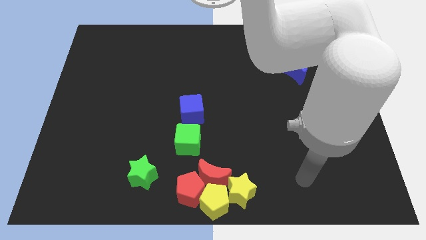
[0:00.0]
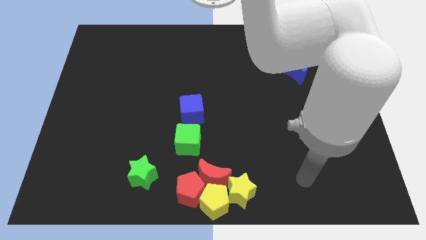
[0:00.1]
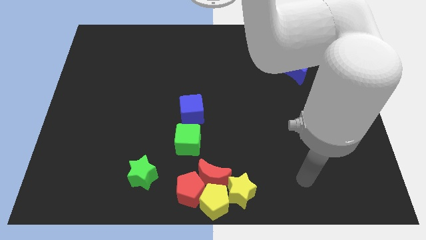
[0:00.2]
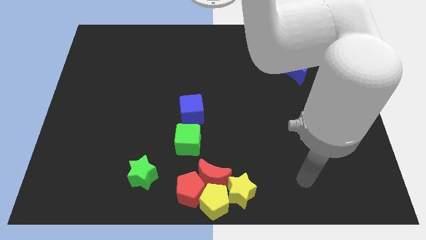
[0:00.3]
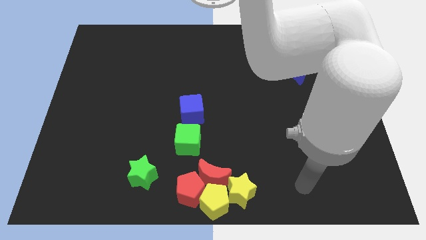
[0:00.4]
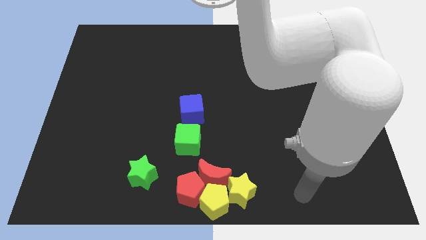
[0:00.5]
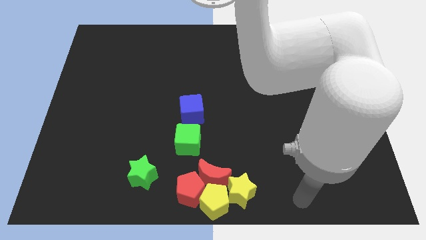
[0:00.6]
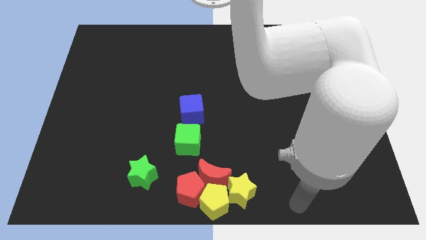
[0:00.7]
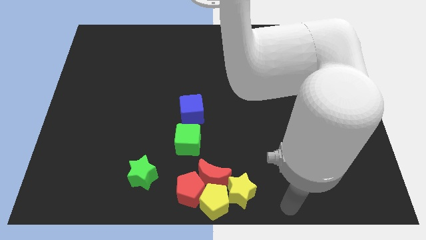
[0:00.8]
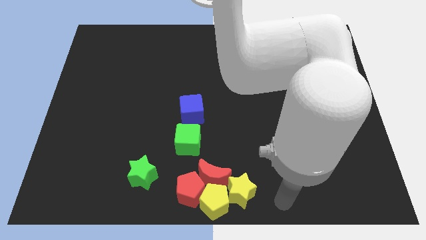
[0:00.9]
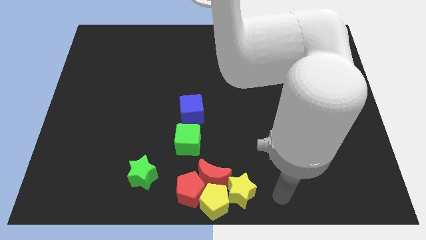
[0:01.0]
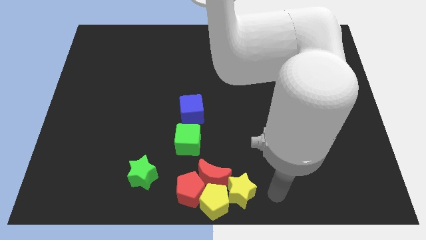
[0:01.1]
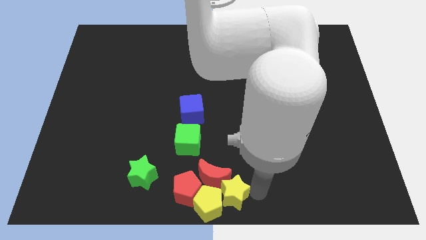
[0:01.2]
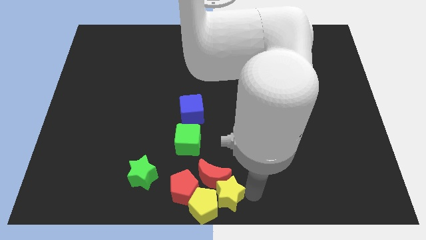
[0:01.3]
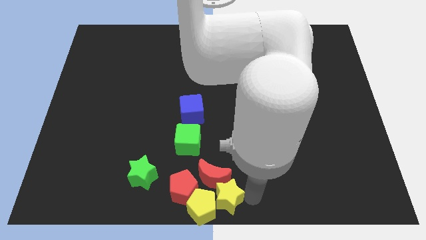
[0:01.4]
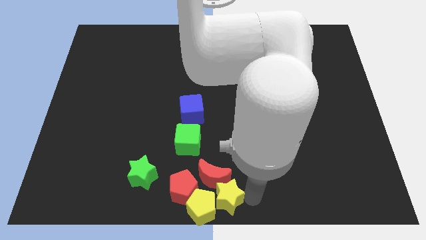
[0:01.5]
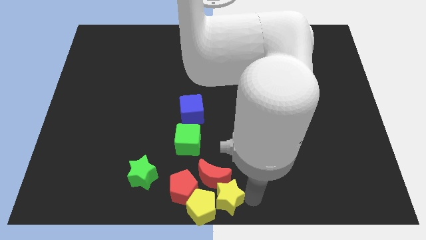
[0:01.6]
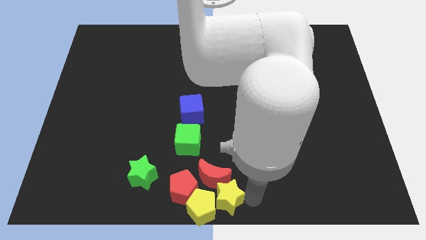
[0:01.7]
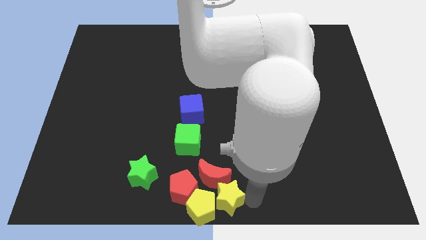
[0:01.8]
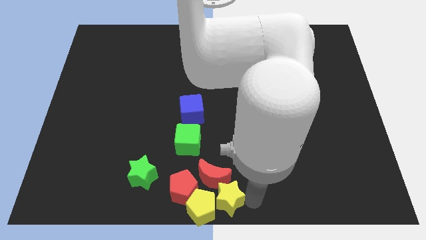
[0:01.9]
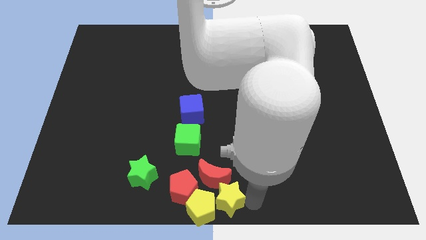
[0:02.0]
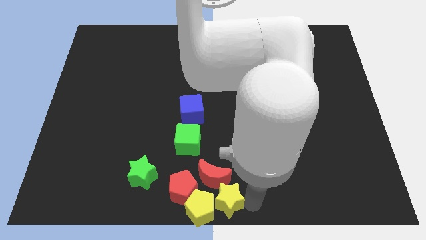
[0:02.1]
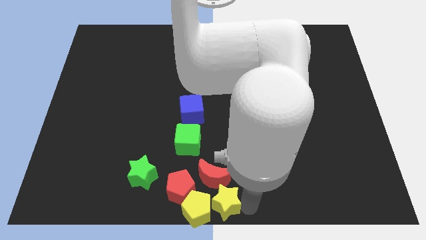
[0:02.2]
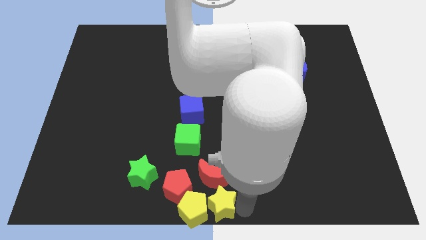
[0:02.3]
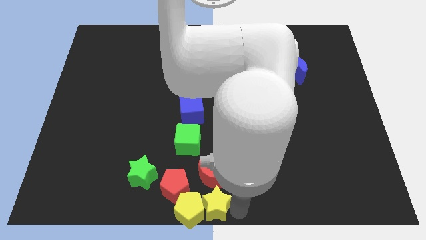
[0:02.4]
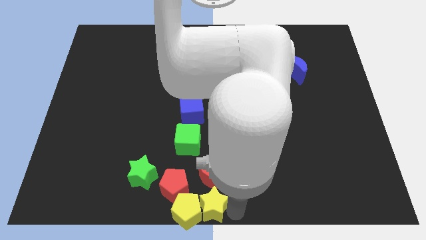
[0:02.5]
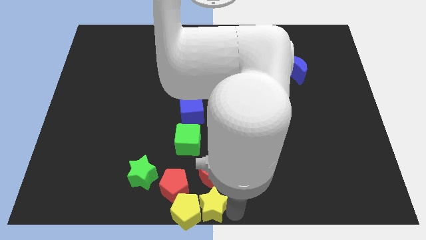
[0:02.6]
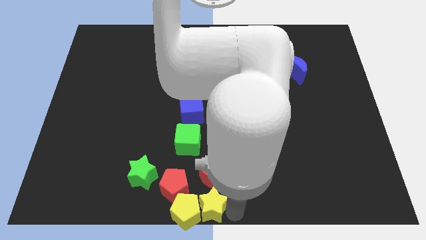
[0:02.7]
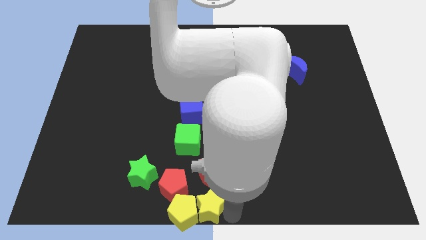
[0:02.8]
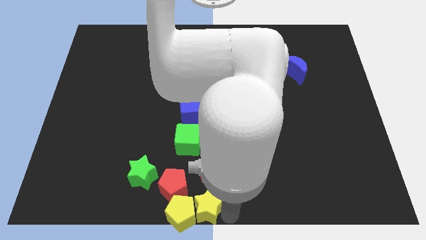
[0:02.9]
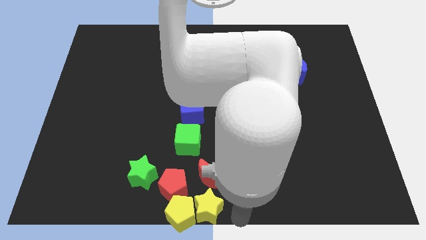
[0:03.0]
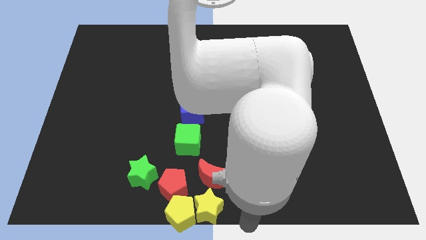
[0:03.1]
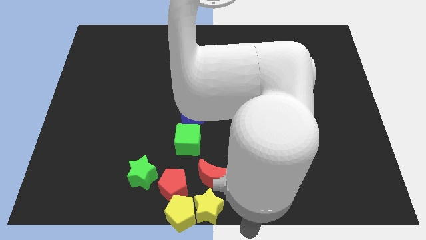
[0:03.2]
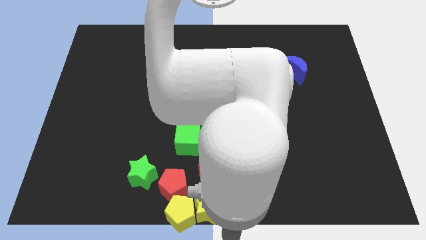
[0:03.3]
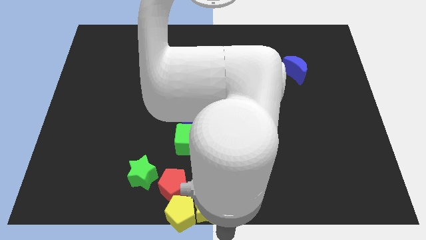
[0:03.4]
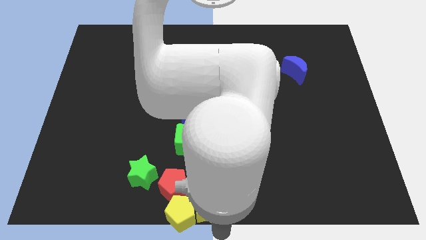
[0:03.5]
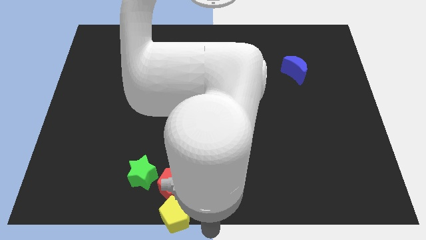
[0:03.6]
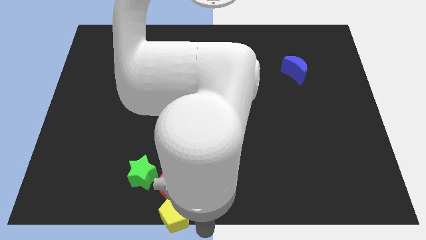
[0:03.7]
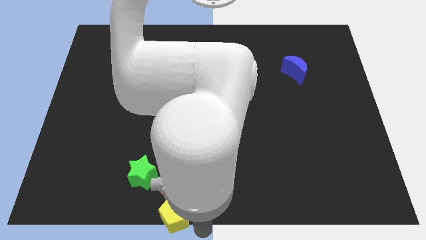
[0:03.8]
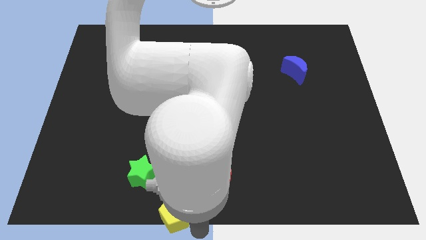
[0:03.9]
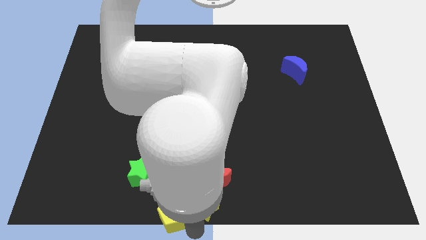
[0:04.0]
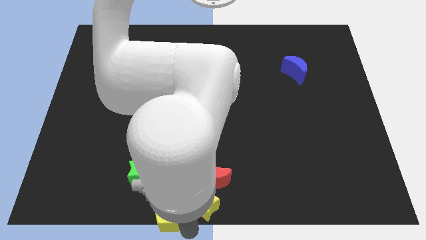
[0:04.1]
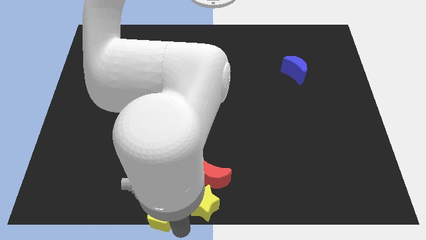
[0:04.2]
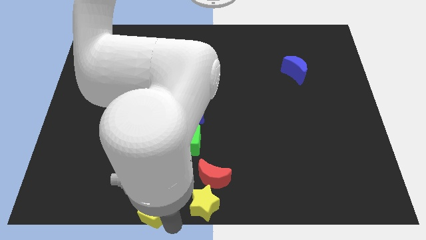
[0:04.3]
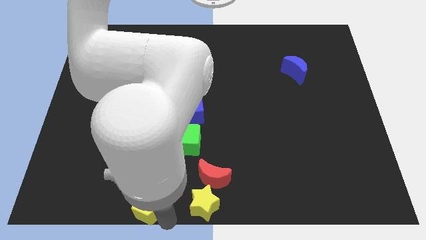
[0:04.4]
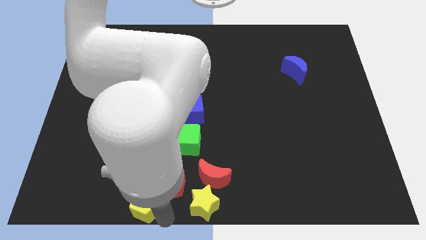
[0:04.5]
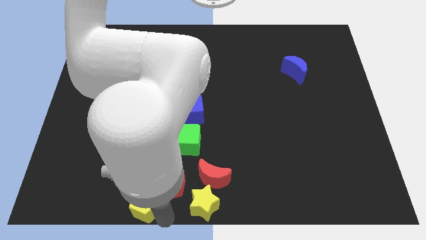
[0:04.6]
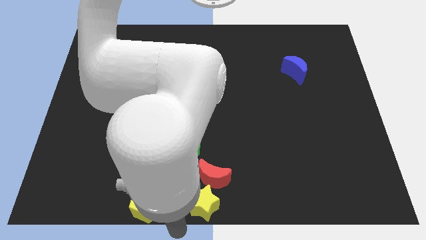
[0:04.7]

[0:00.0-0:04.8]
separate the yellow blocks

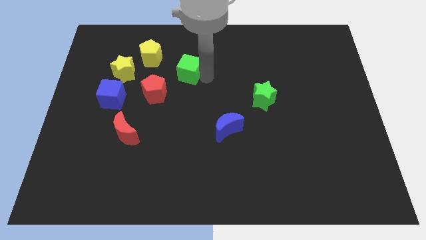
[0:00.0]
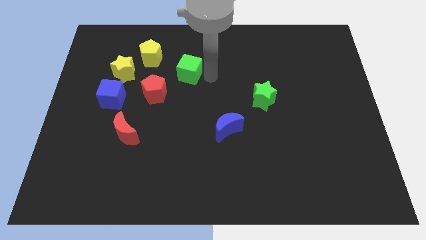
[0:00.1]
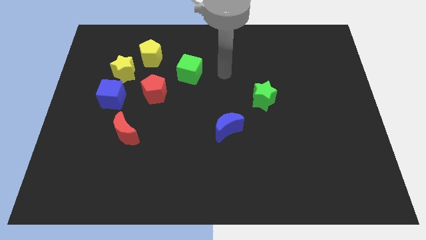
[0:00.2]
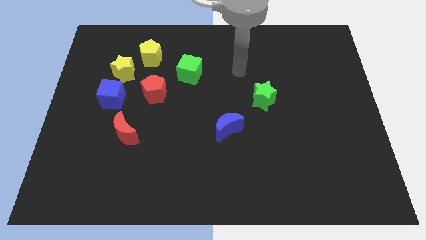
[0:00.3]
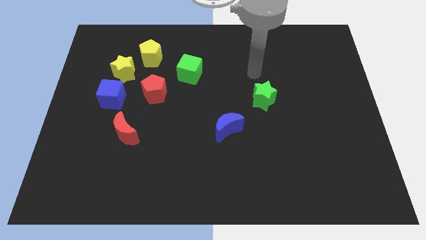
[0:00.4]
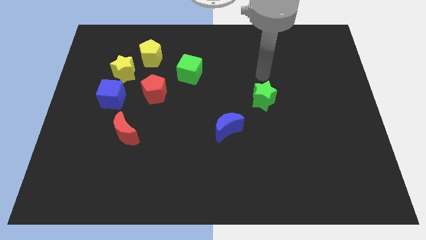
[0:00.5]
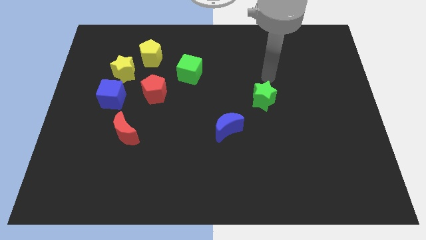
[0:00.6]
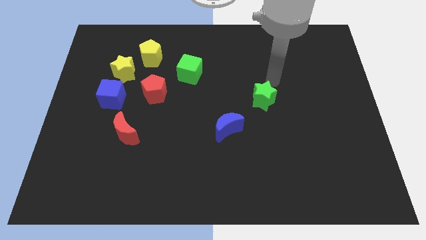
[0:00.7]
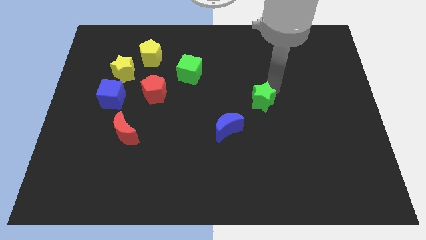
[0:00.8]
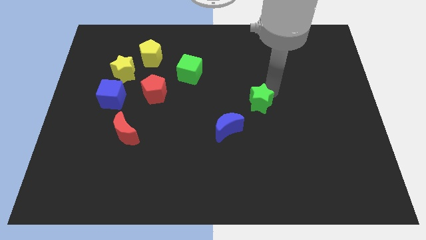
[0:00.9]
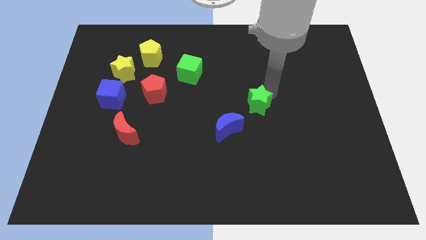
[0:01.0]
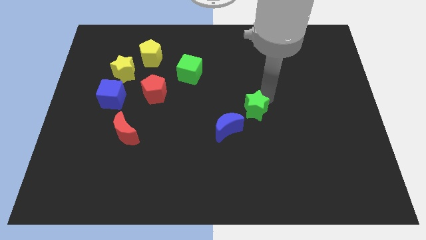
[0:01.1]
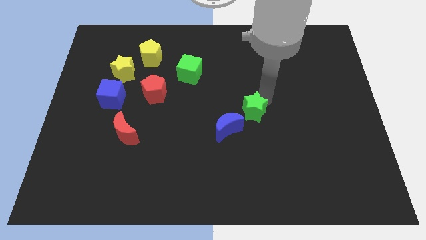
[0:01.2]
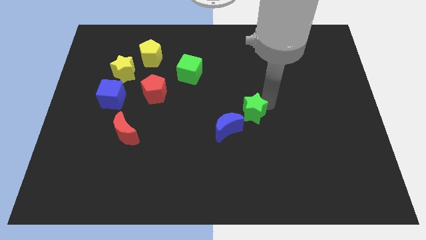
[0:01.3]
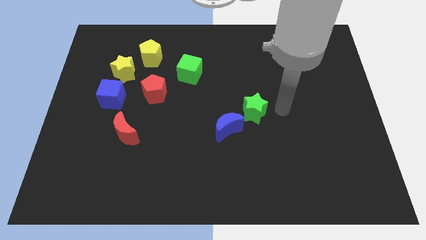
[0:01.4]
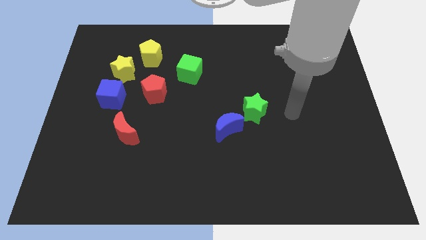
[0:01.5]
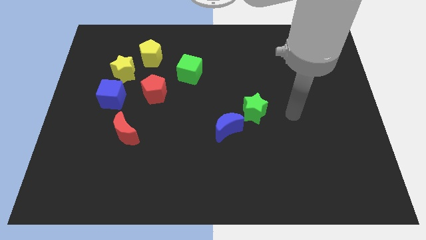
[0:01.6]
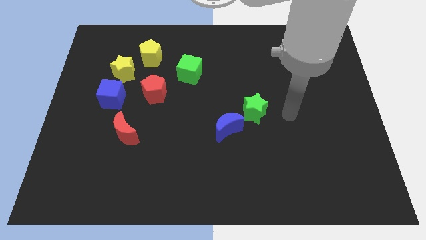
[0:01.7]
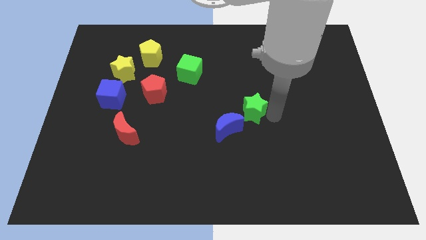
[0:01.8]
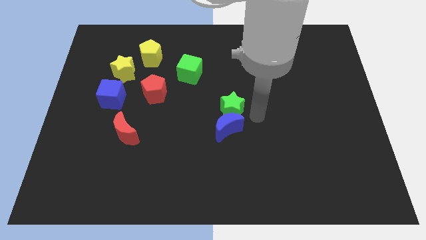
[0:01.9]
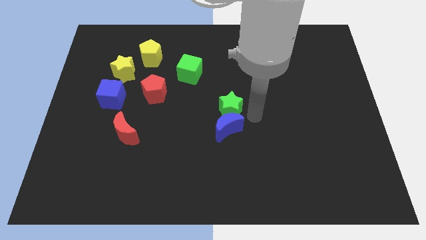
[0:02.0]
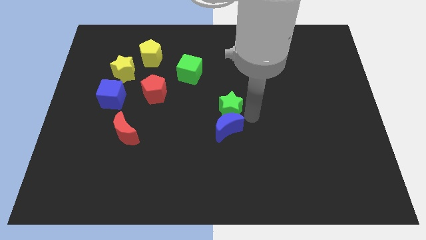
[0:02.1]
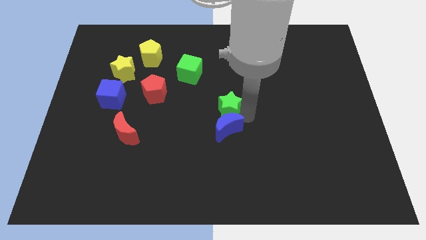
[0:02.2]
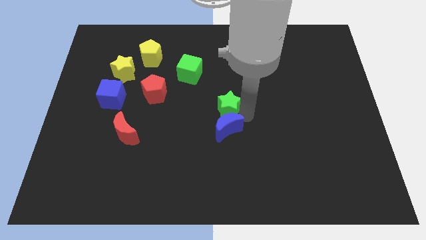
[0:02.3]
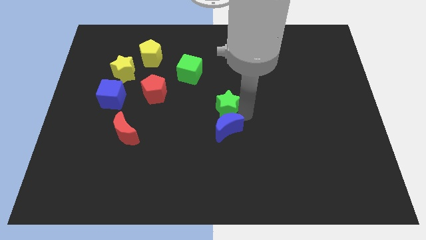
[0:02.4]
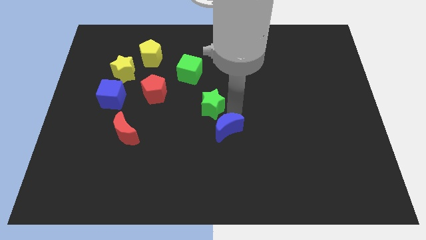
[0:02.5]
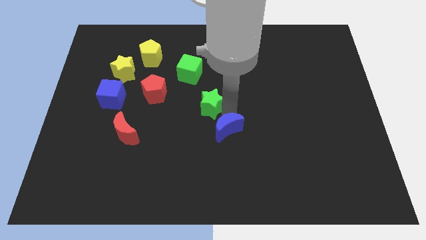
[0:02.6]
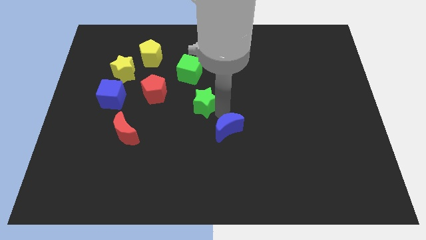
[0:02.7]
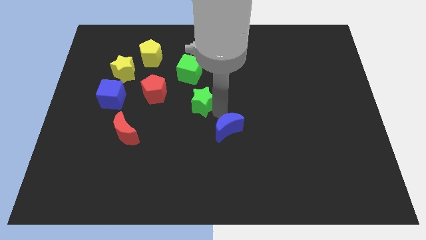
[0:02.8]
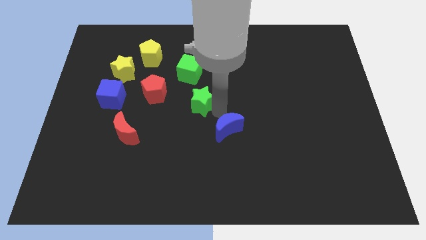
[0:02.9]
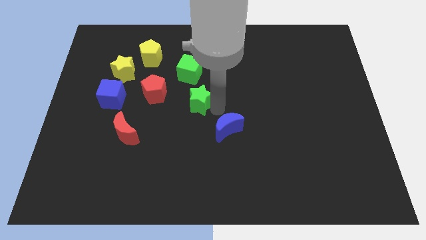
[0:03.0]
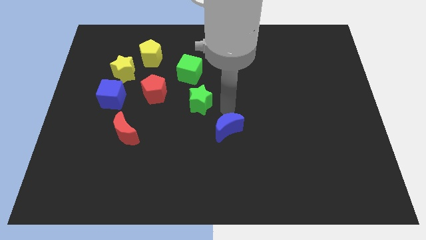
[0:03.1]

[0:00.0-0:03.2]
move the green star towards the center

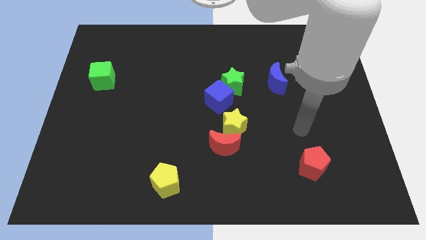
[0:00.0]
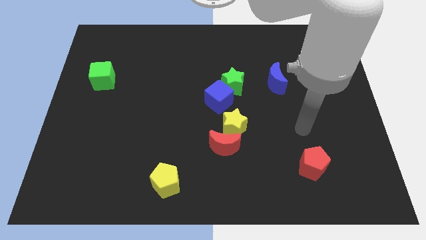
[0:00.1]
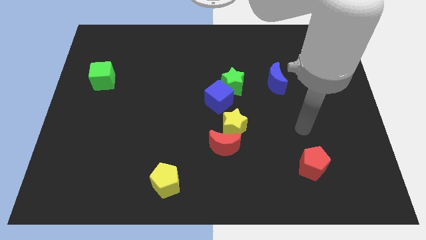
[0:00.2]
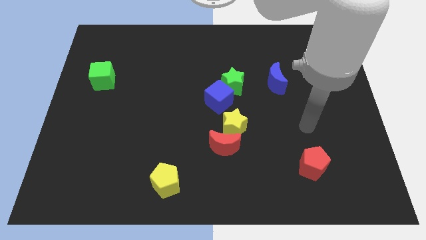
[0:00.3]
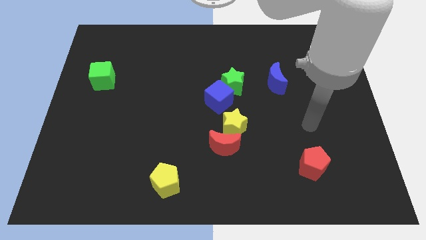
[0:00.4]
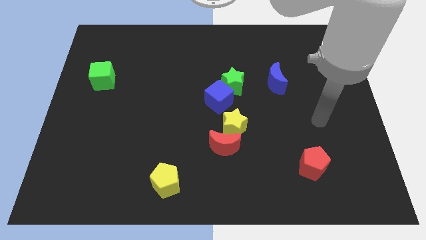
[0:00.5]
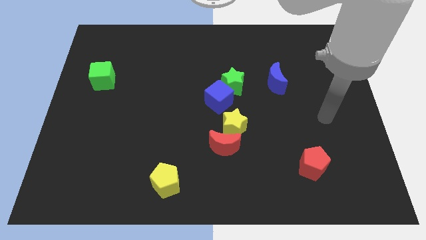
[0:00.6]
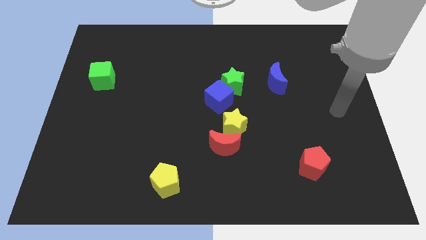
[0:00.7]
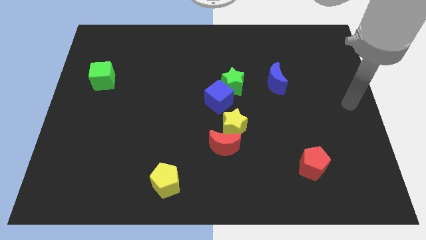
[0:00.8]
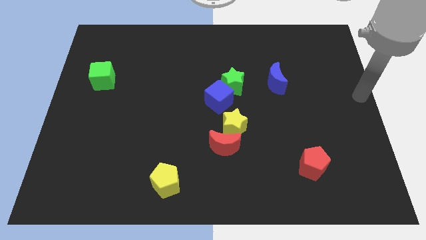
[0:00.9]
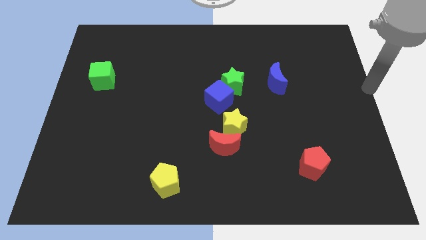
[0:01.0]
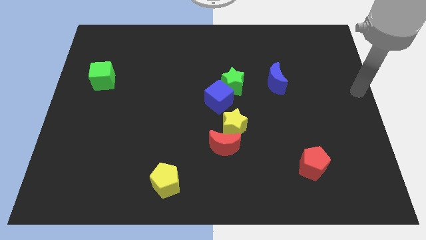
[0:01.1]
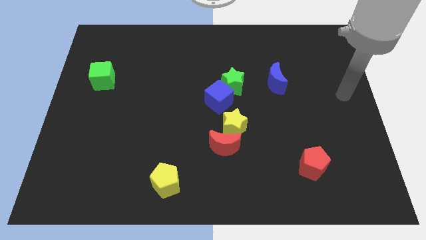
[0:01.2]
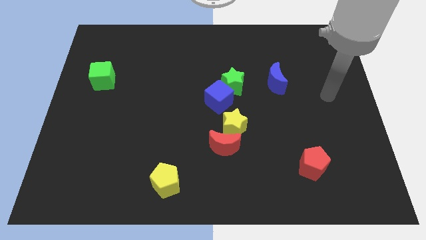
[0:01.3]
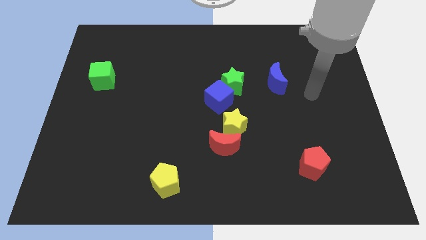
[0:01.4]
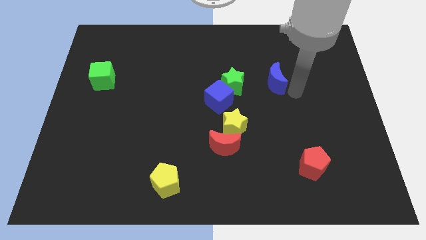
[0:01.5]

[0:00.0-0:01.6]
move the arm near the blue moon
